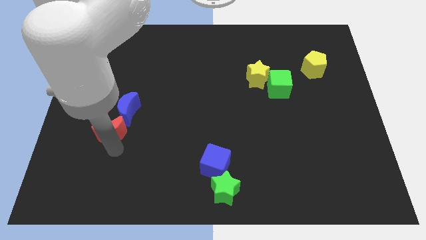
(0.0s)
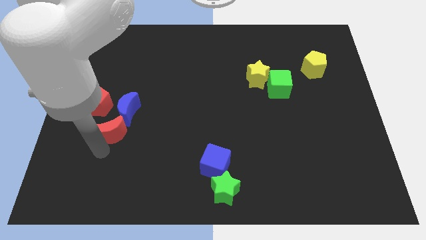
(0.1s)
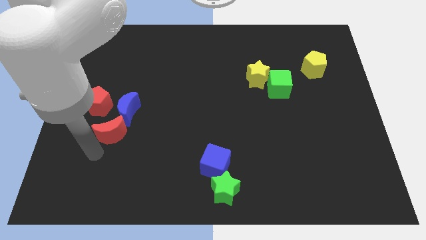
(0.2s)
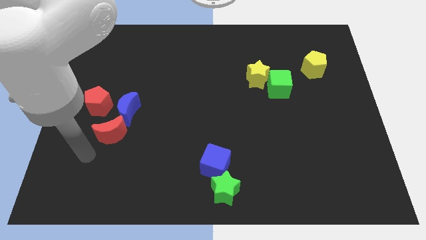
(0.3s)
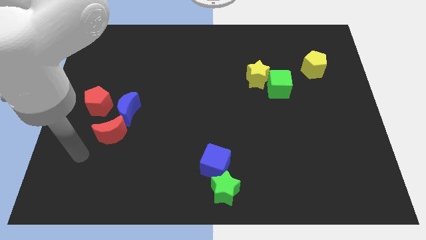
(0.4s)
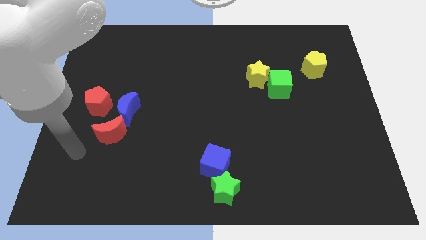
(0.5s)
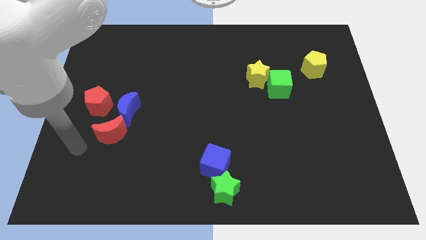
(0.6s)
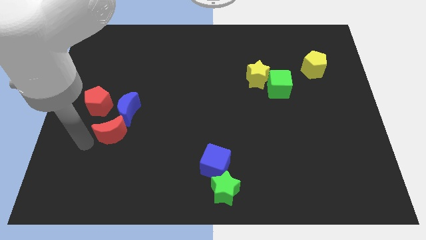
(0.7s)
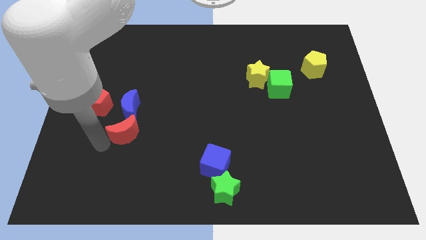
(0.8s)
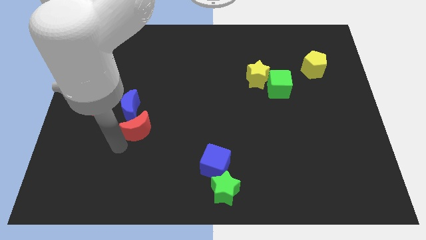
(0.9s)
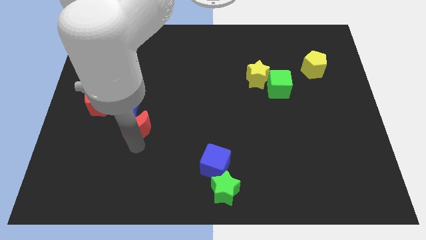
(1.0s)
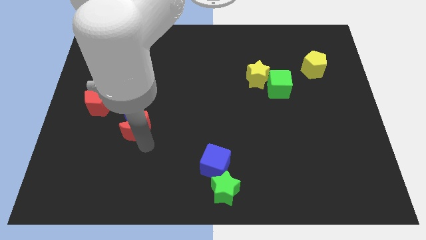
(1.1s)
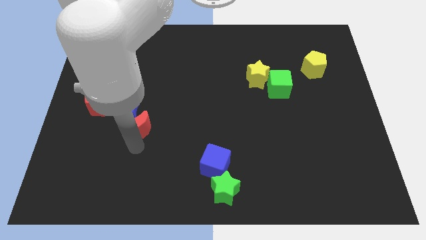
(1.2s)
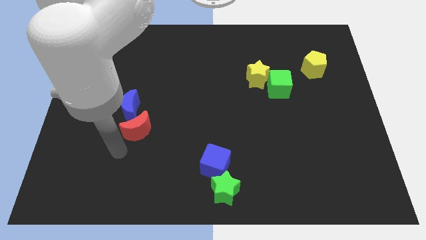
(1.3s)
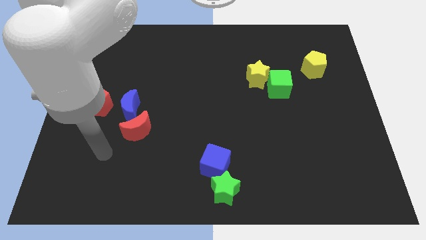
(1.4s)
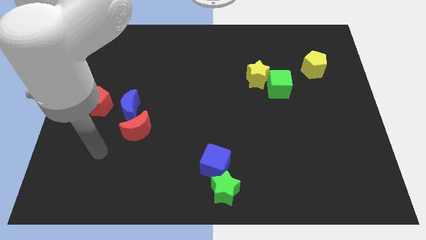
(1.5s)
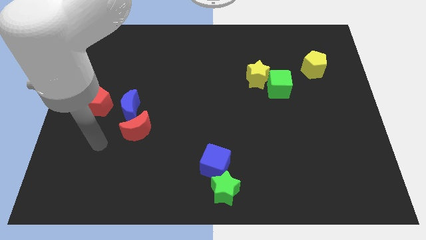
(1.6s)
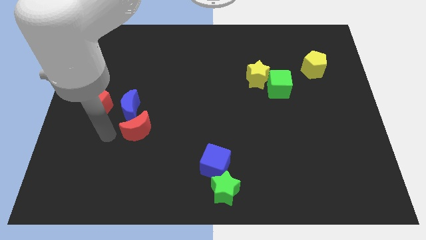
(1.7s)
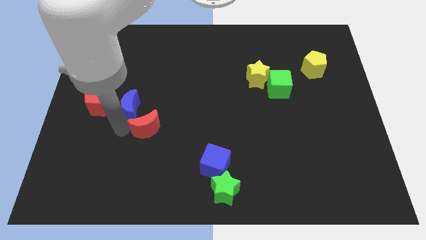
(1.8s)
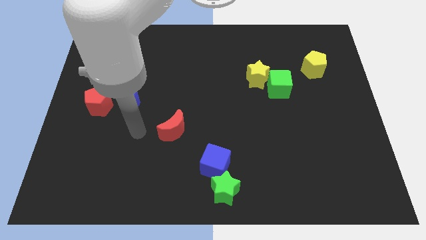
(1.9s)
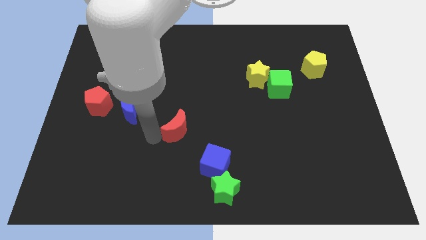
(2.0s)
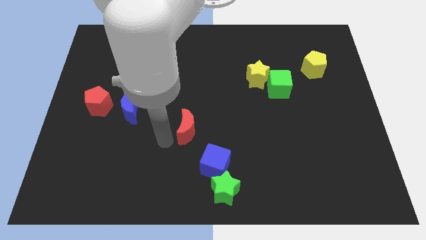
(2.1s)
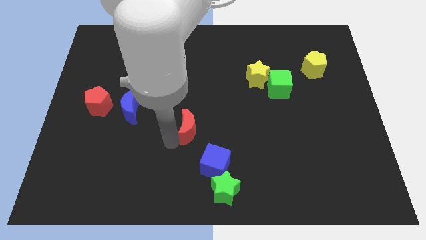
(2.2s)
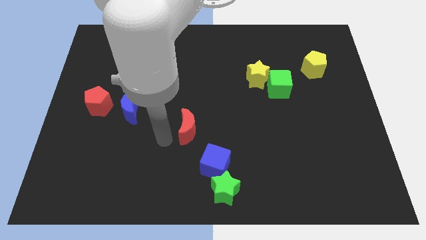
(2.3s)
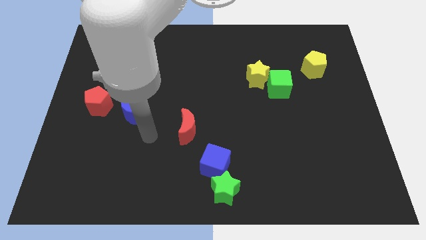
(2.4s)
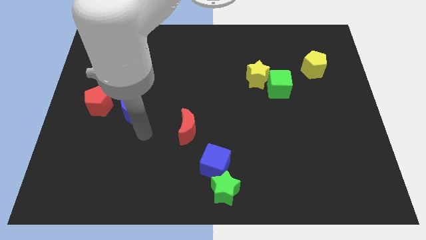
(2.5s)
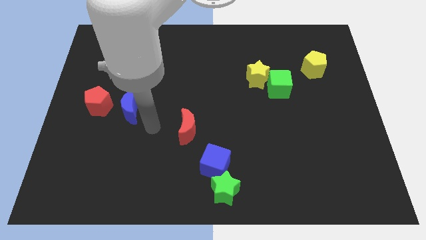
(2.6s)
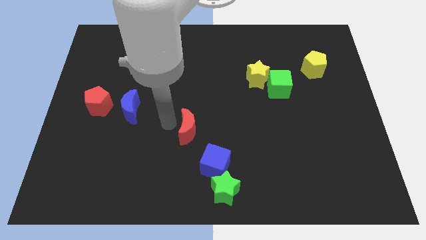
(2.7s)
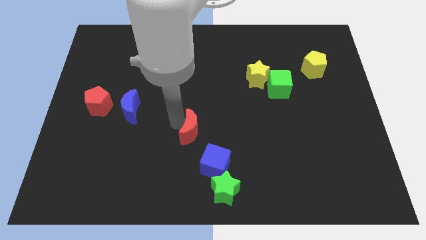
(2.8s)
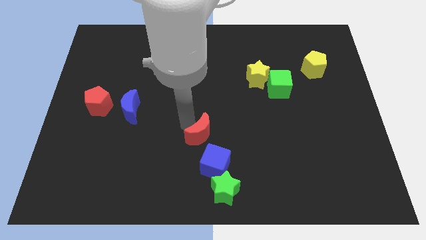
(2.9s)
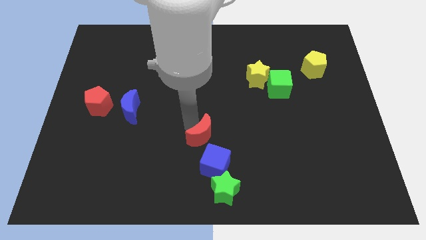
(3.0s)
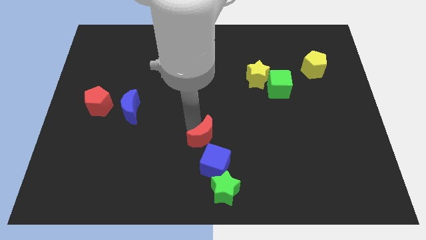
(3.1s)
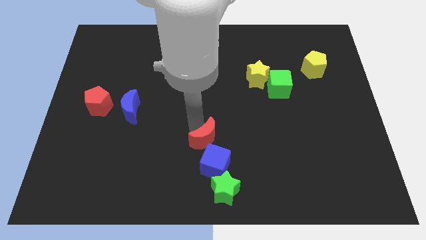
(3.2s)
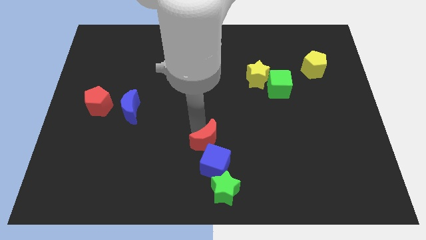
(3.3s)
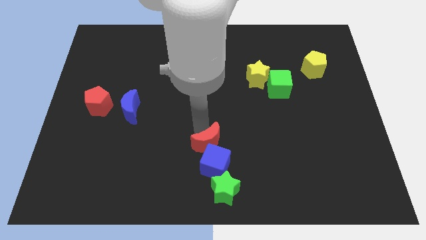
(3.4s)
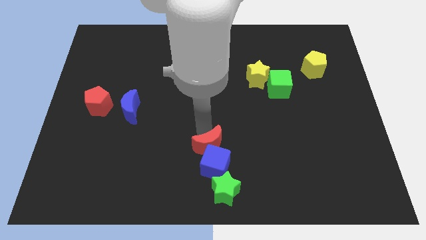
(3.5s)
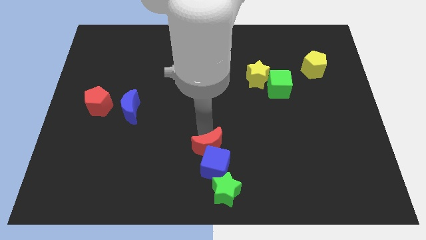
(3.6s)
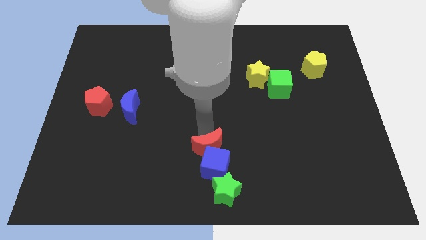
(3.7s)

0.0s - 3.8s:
push the red crescent into the blue cube

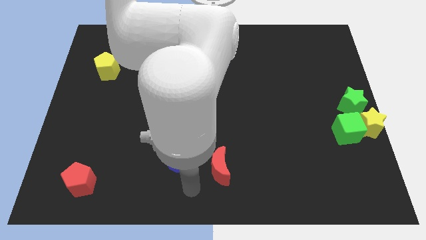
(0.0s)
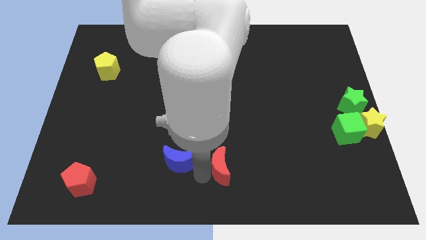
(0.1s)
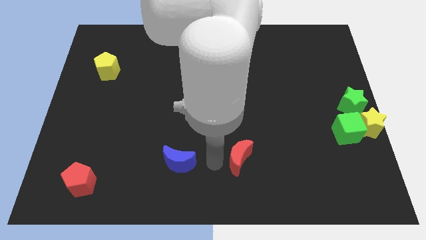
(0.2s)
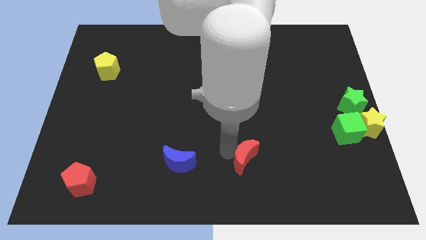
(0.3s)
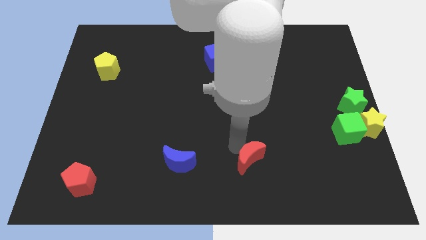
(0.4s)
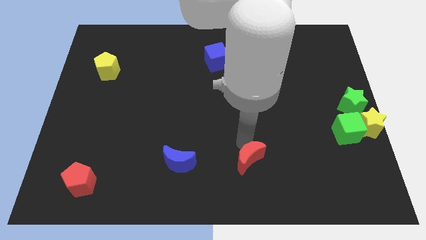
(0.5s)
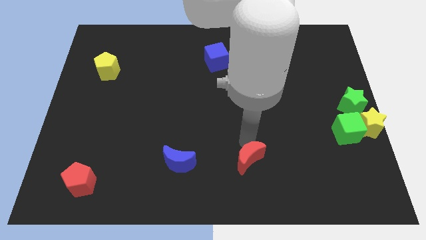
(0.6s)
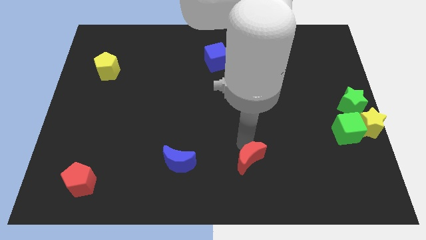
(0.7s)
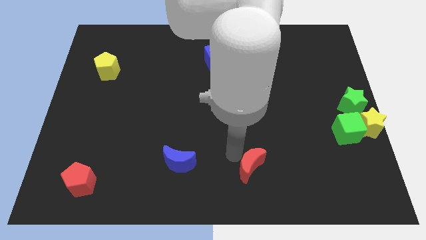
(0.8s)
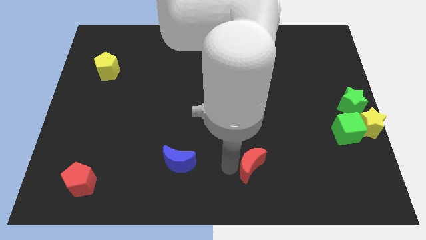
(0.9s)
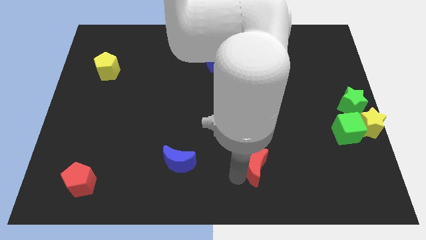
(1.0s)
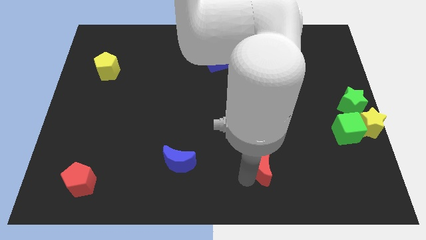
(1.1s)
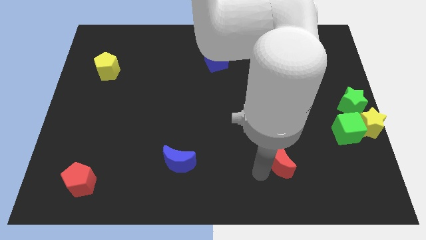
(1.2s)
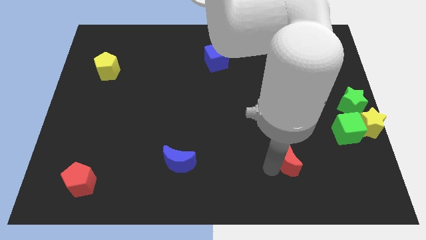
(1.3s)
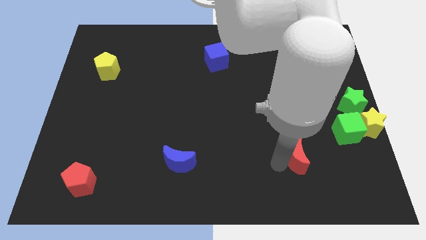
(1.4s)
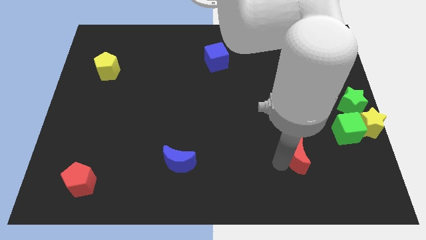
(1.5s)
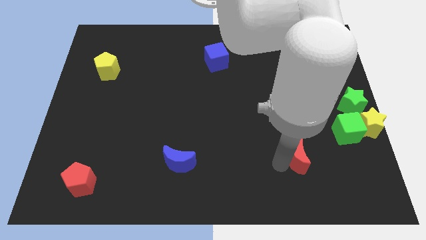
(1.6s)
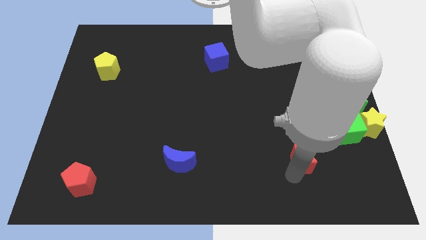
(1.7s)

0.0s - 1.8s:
push the red crescent towards the green cube

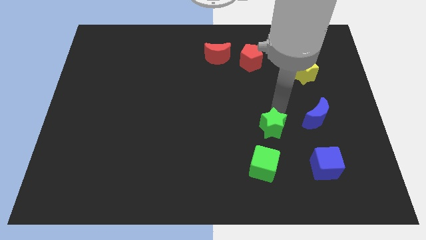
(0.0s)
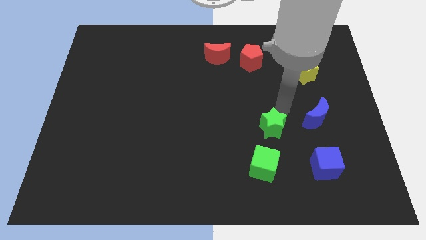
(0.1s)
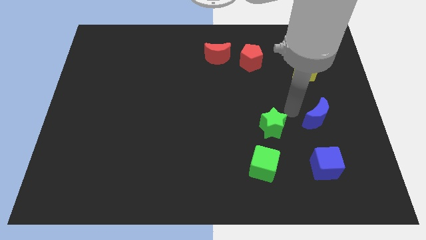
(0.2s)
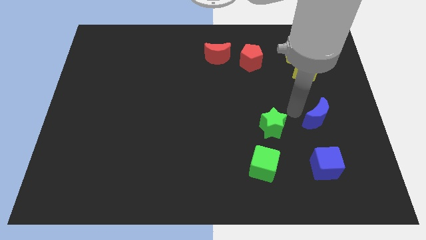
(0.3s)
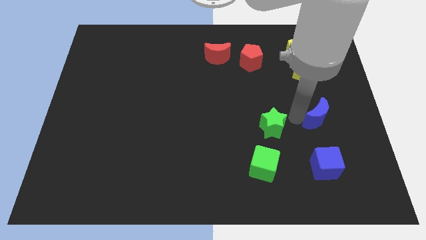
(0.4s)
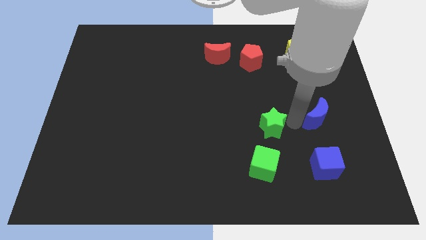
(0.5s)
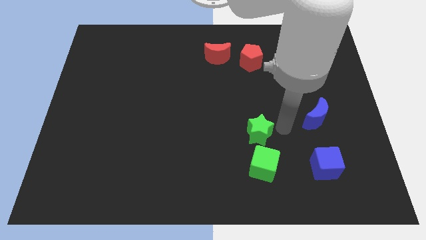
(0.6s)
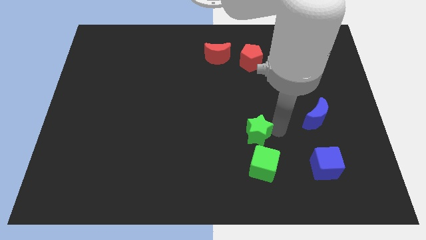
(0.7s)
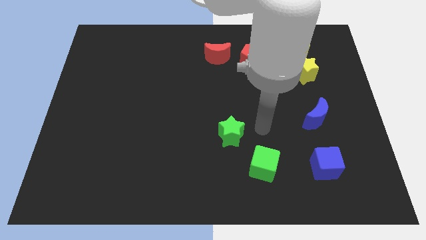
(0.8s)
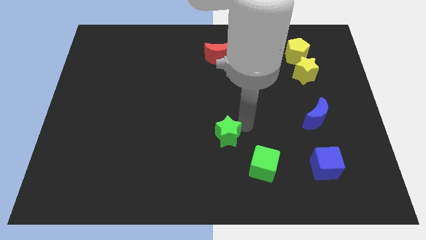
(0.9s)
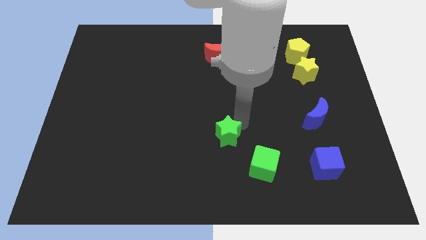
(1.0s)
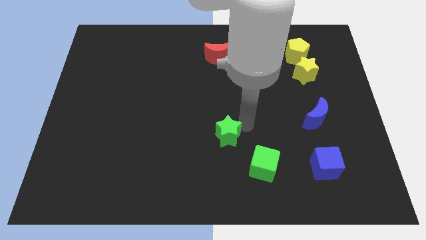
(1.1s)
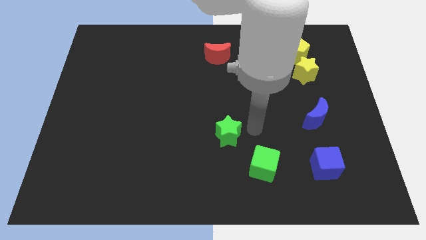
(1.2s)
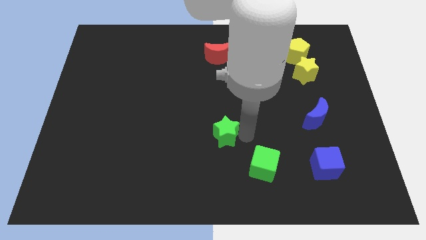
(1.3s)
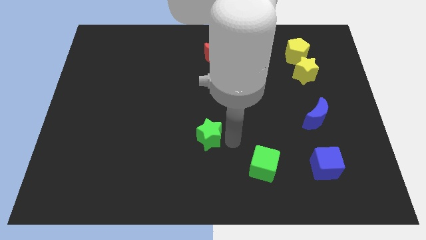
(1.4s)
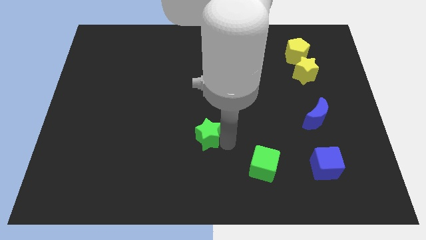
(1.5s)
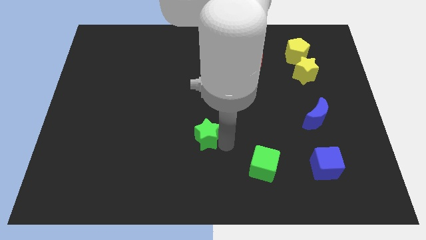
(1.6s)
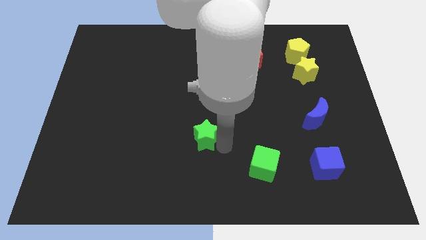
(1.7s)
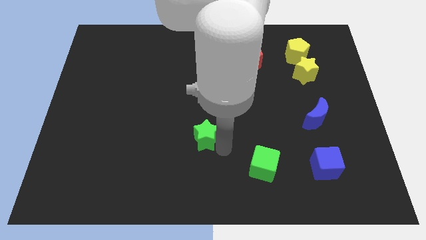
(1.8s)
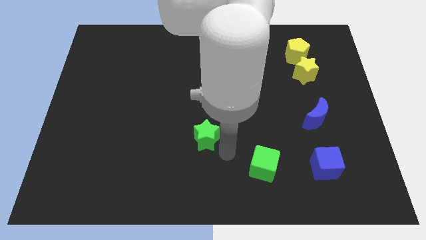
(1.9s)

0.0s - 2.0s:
move the green star away from the blue moon

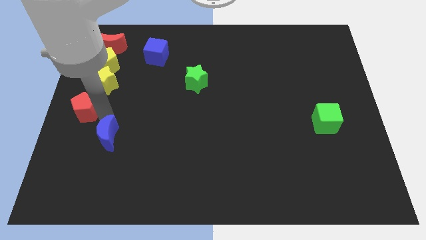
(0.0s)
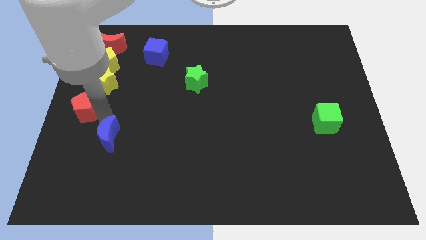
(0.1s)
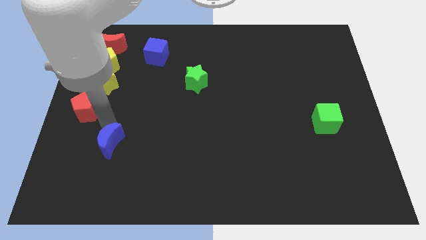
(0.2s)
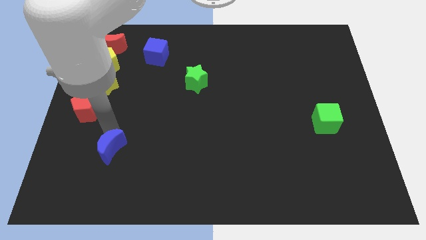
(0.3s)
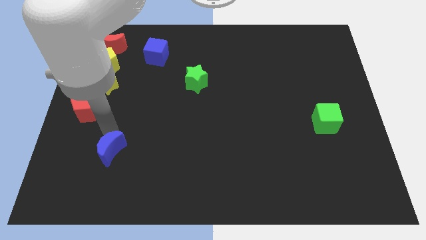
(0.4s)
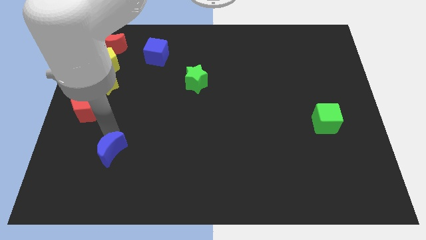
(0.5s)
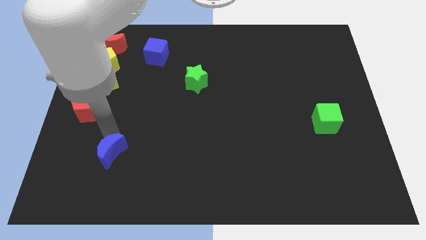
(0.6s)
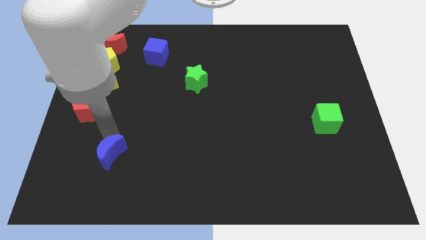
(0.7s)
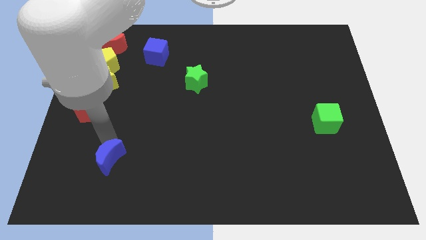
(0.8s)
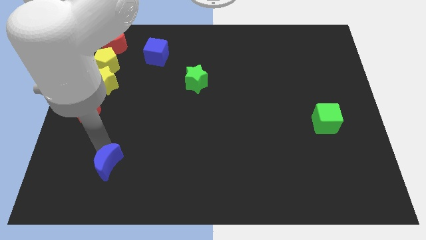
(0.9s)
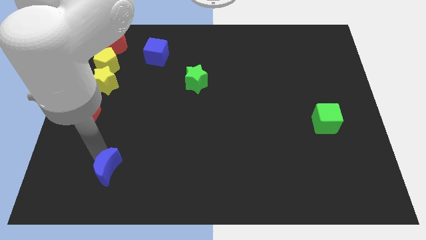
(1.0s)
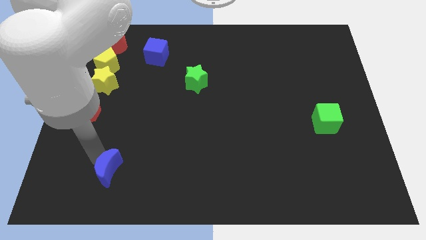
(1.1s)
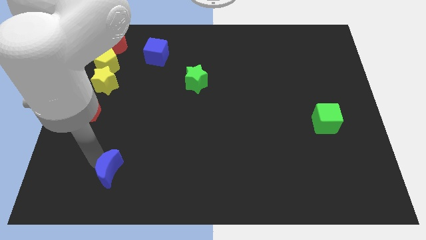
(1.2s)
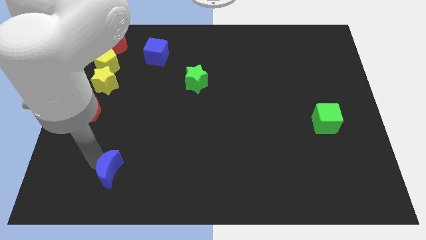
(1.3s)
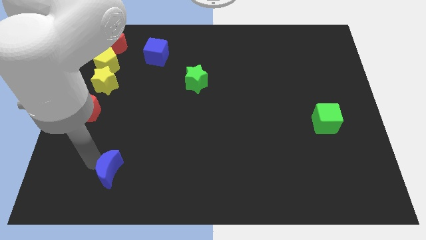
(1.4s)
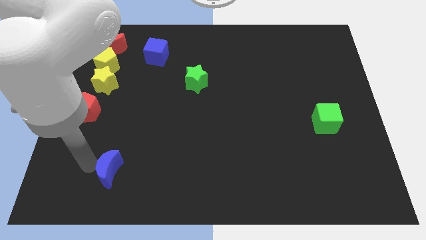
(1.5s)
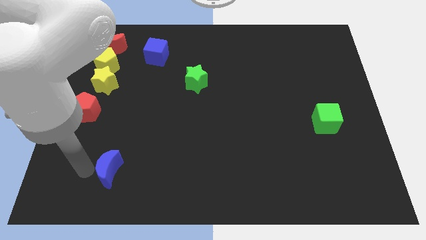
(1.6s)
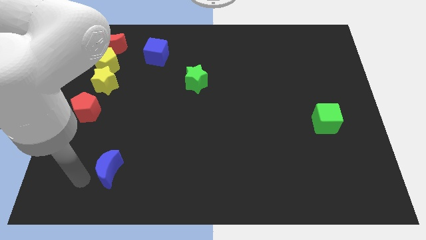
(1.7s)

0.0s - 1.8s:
push the blue moon towards the bottom
